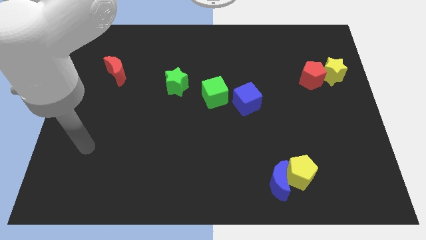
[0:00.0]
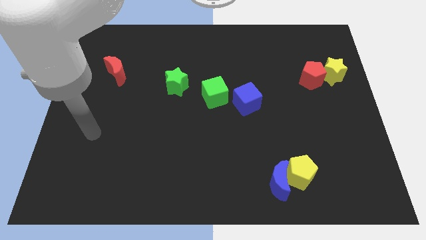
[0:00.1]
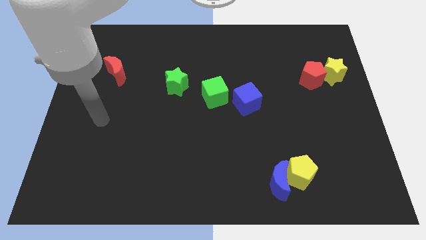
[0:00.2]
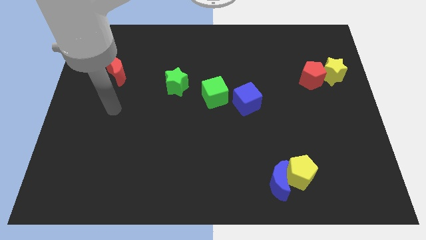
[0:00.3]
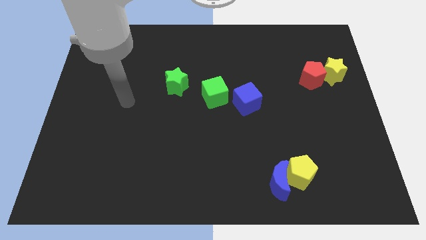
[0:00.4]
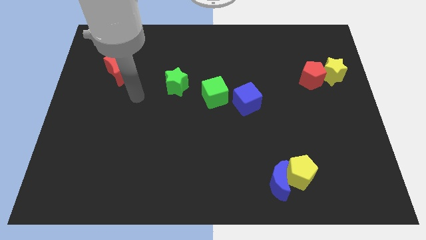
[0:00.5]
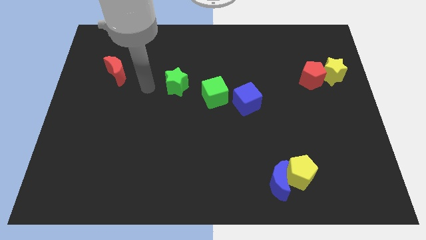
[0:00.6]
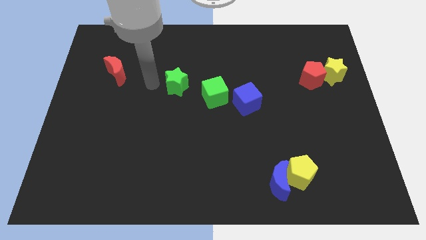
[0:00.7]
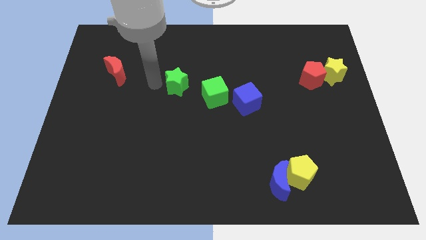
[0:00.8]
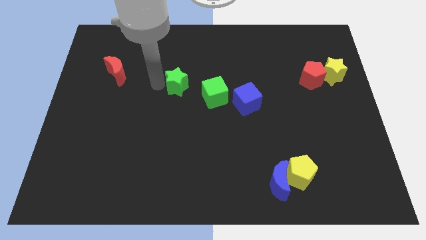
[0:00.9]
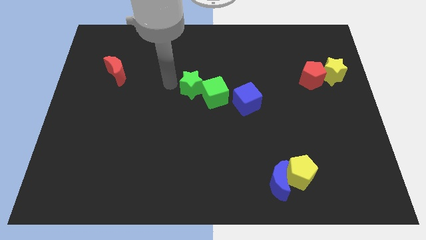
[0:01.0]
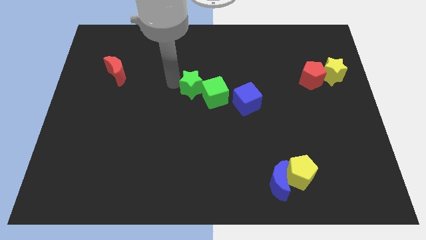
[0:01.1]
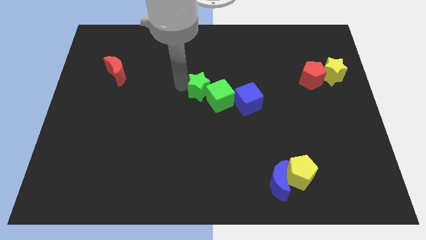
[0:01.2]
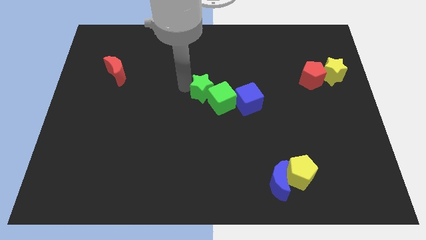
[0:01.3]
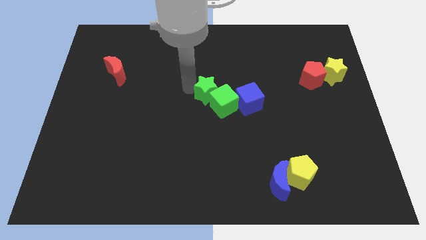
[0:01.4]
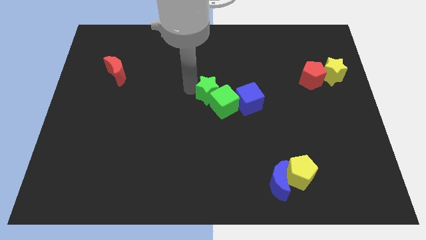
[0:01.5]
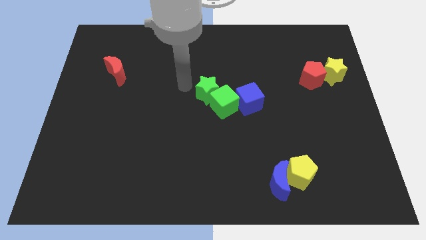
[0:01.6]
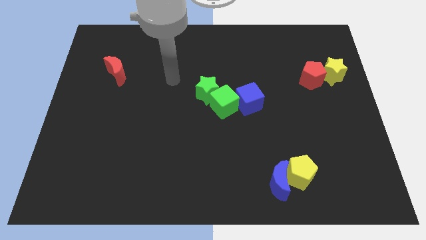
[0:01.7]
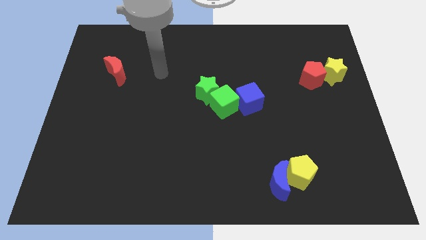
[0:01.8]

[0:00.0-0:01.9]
move the green star and green cube towards the blue cube

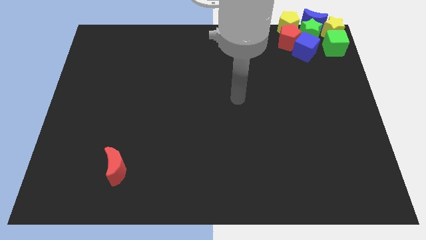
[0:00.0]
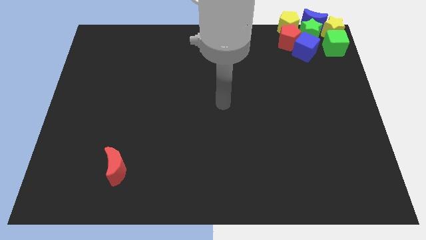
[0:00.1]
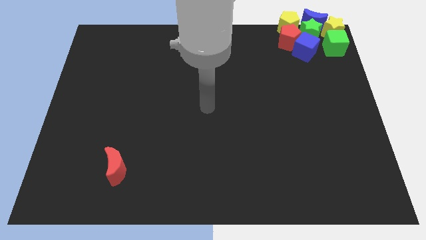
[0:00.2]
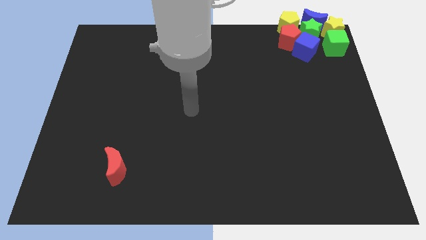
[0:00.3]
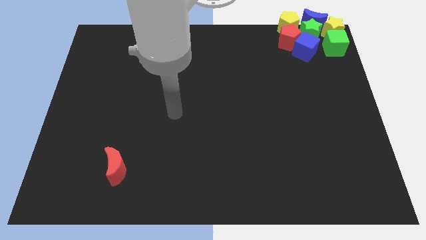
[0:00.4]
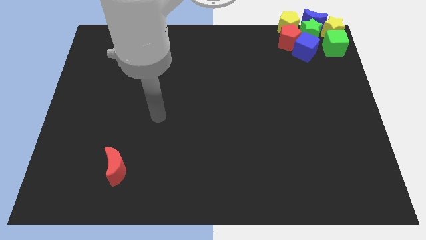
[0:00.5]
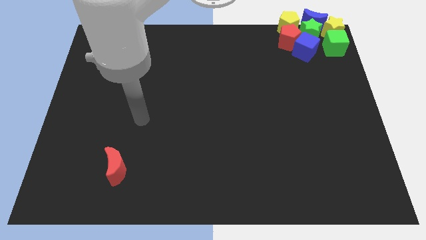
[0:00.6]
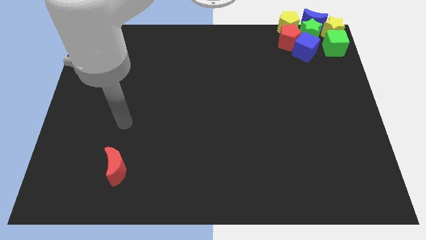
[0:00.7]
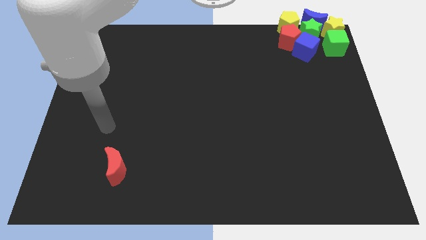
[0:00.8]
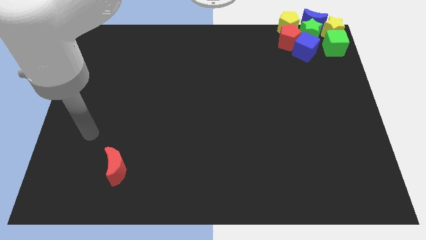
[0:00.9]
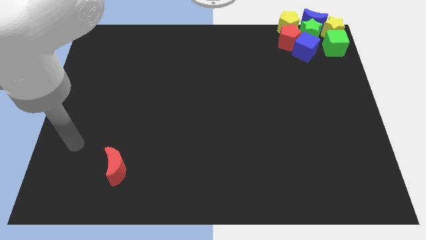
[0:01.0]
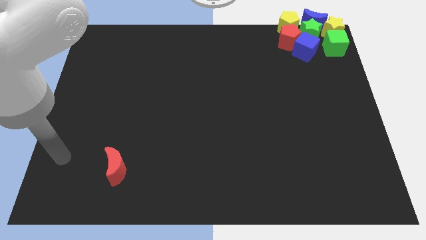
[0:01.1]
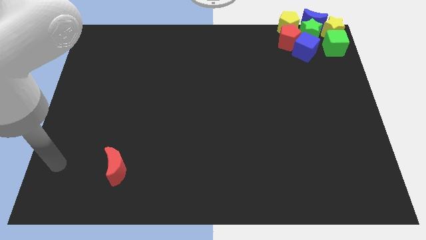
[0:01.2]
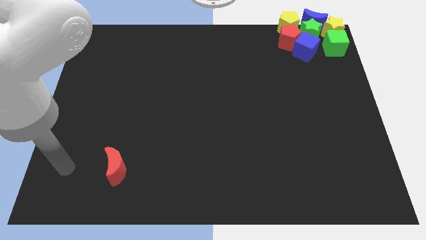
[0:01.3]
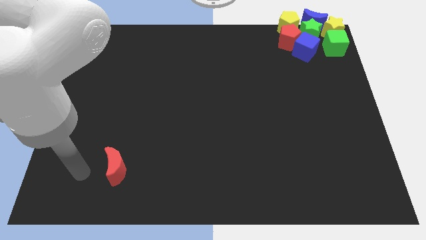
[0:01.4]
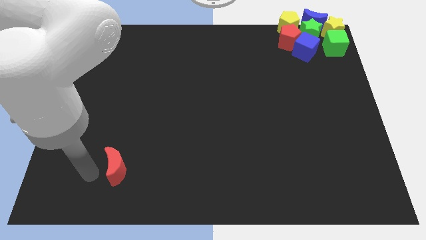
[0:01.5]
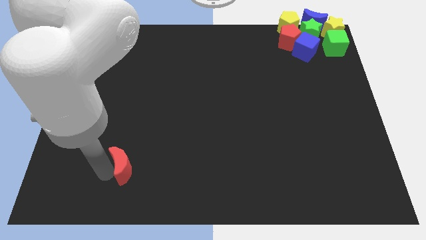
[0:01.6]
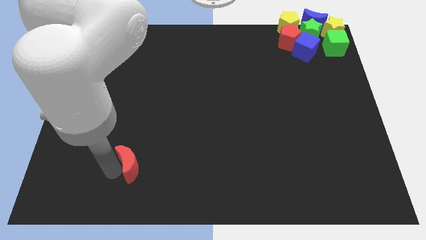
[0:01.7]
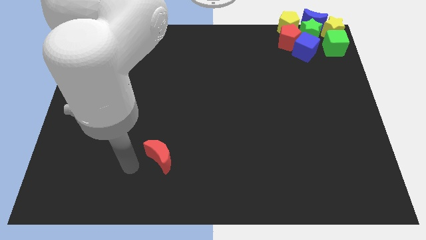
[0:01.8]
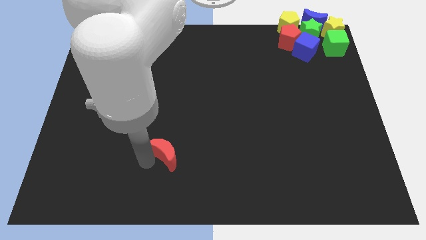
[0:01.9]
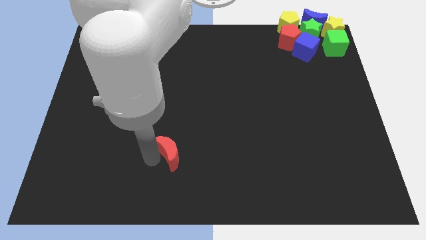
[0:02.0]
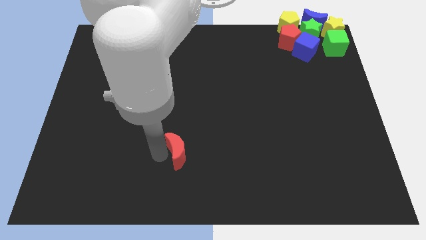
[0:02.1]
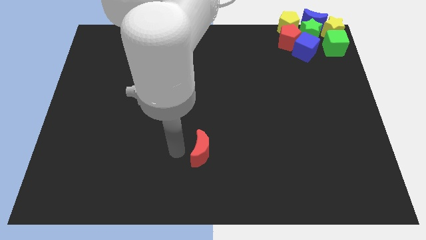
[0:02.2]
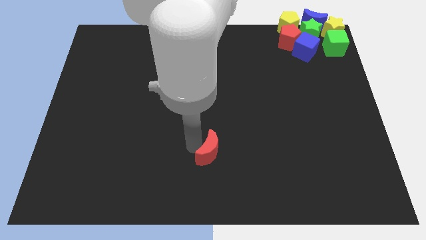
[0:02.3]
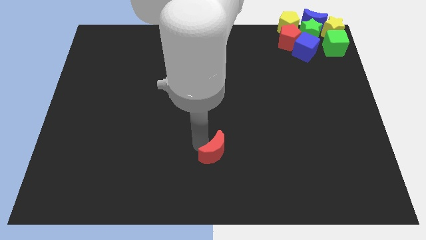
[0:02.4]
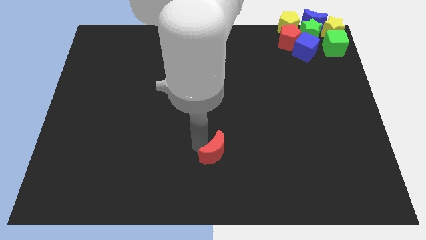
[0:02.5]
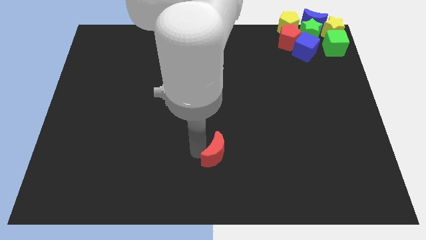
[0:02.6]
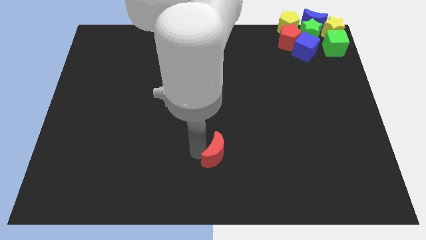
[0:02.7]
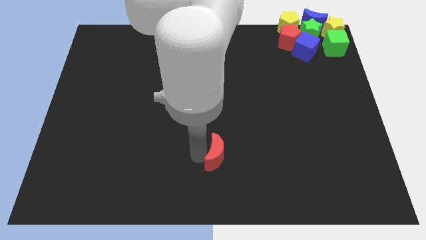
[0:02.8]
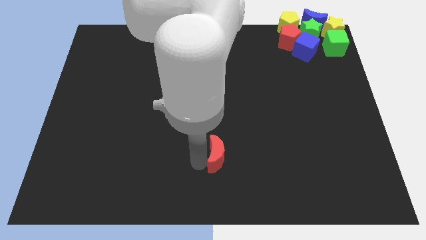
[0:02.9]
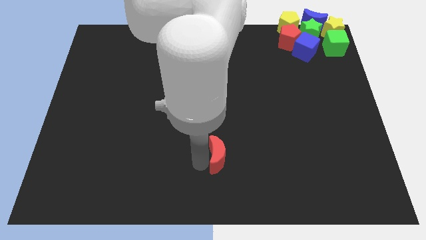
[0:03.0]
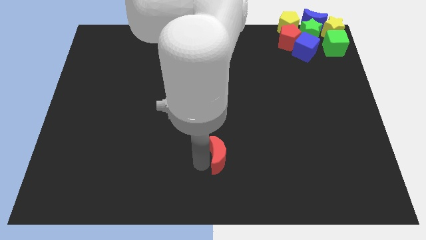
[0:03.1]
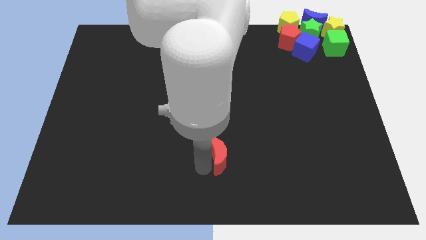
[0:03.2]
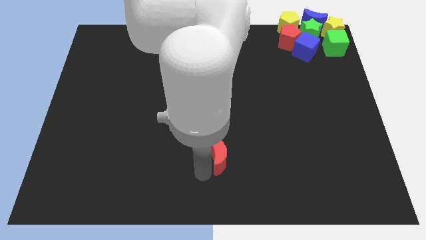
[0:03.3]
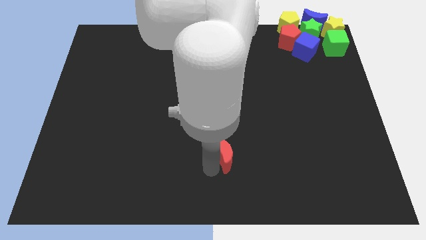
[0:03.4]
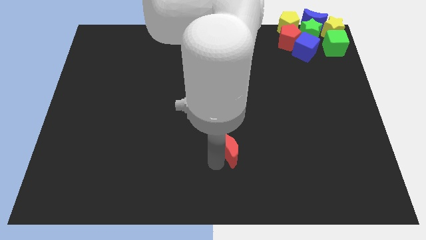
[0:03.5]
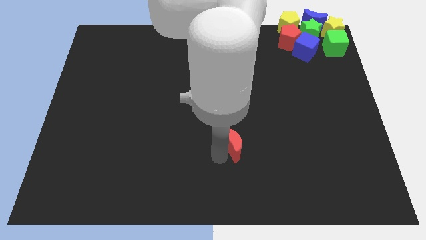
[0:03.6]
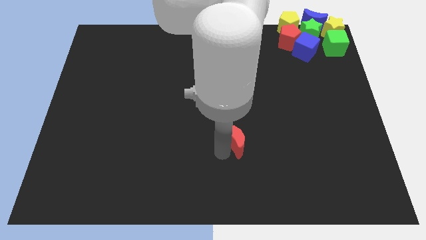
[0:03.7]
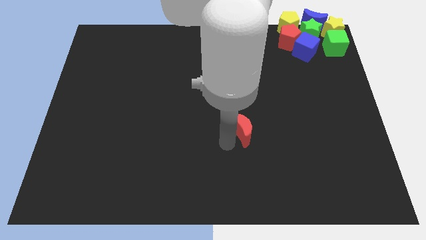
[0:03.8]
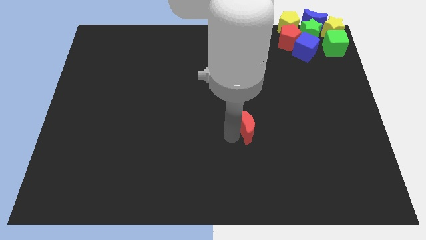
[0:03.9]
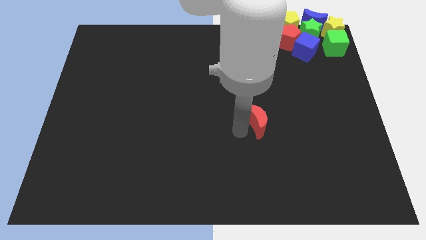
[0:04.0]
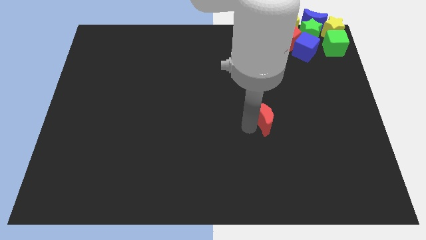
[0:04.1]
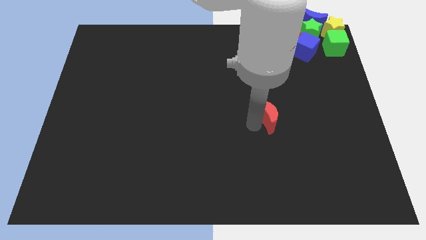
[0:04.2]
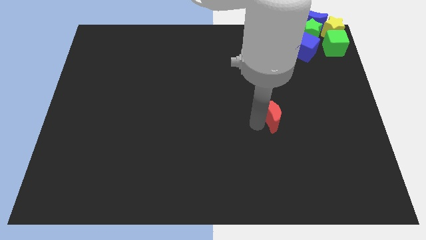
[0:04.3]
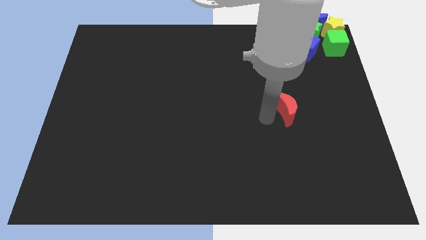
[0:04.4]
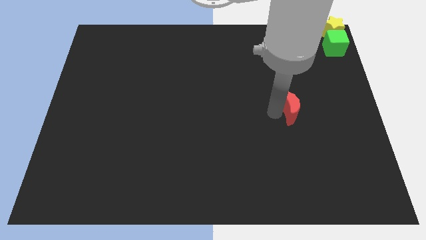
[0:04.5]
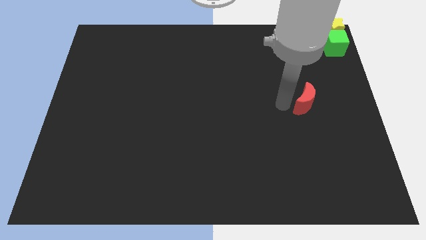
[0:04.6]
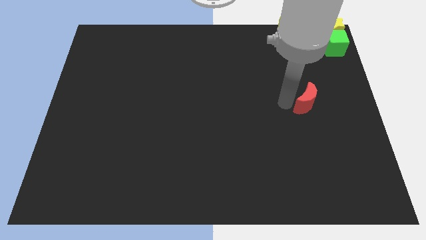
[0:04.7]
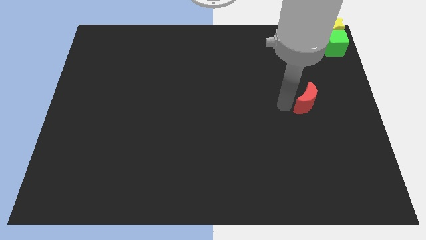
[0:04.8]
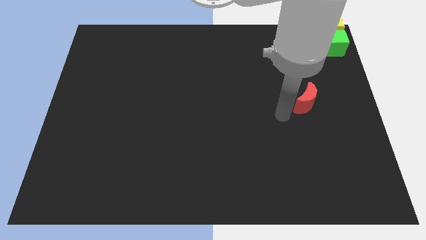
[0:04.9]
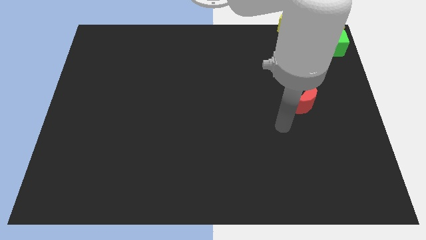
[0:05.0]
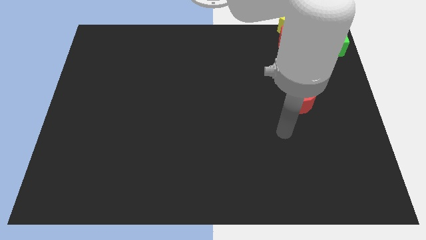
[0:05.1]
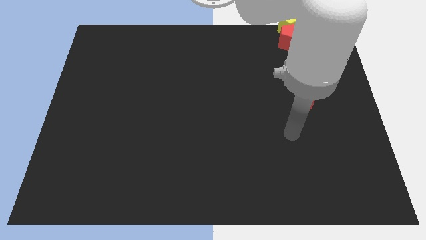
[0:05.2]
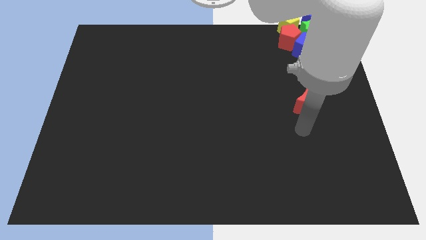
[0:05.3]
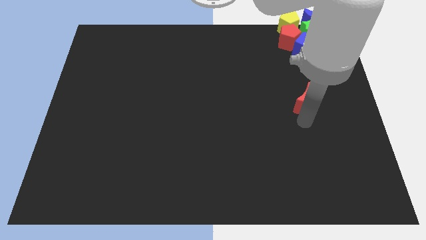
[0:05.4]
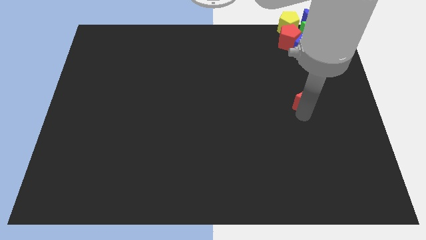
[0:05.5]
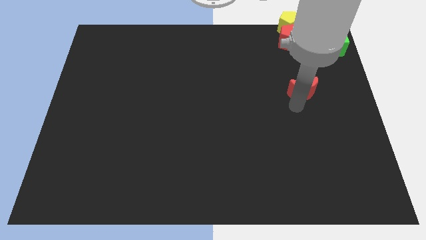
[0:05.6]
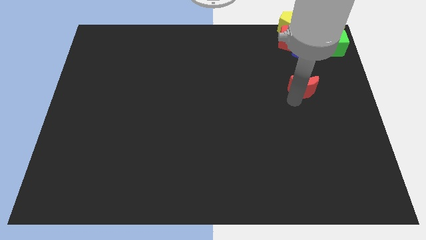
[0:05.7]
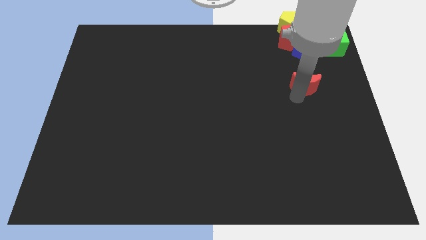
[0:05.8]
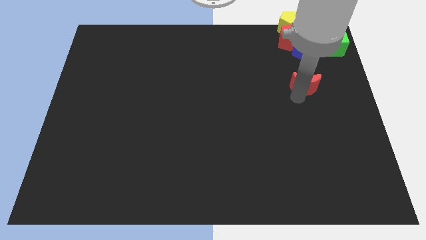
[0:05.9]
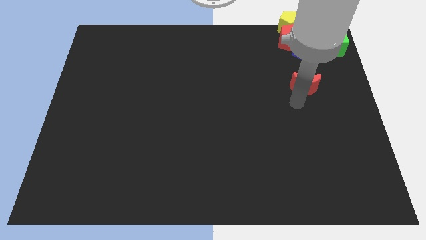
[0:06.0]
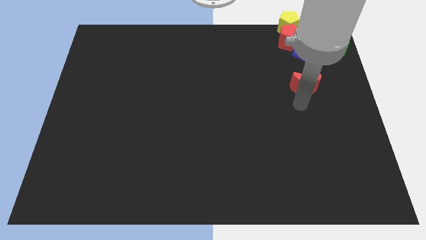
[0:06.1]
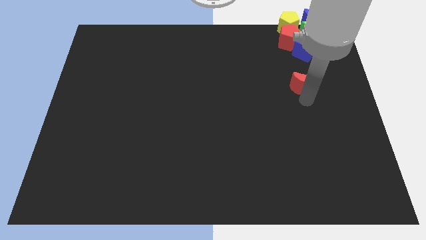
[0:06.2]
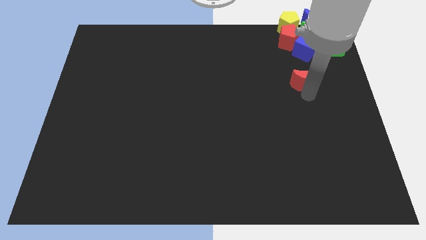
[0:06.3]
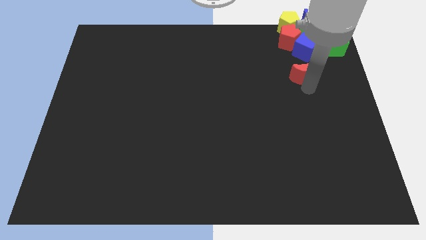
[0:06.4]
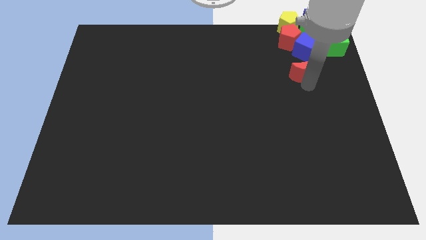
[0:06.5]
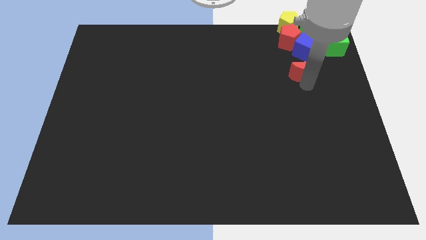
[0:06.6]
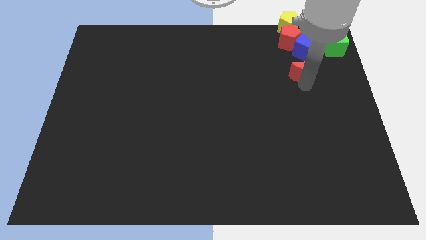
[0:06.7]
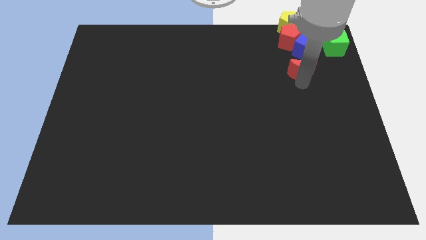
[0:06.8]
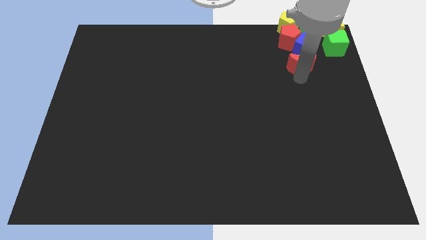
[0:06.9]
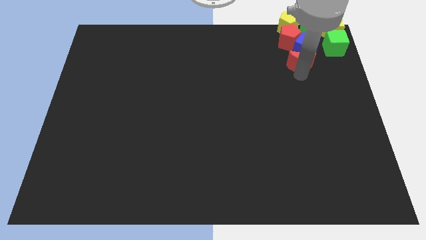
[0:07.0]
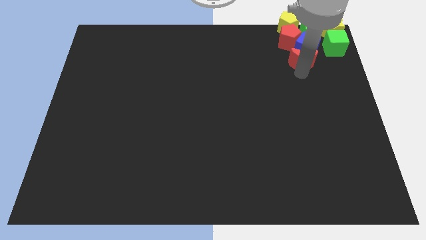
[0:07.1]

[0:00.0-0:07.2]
move red moon below the blue cube
